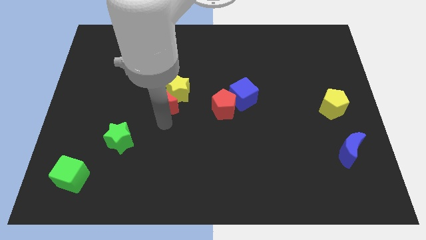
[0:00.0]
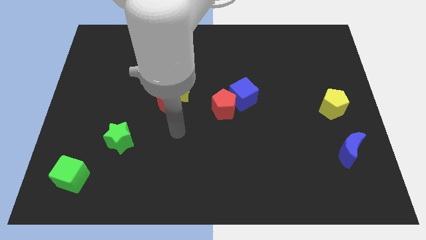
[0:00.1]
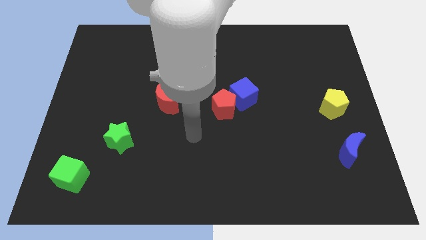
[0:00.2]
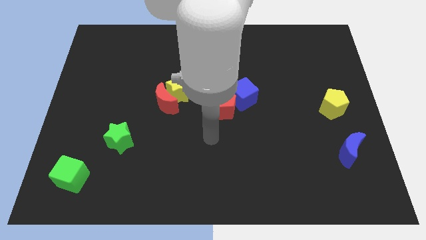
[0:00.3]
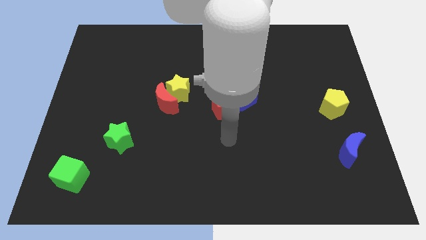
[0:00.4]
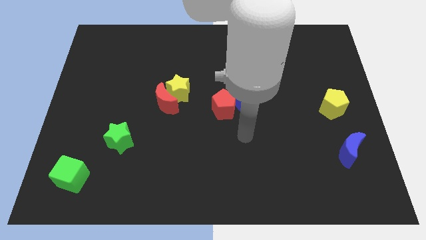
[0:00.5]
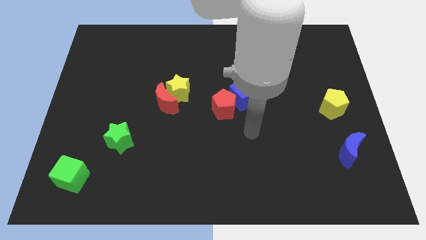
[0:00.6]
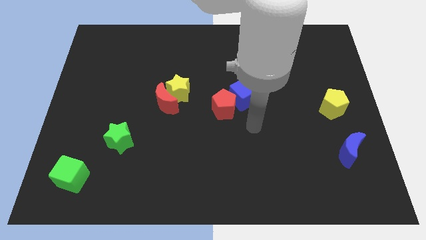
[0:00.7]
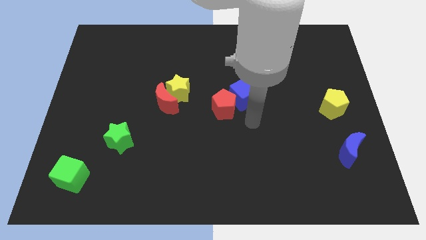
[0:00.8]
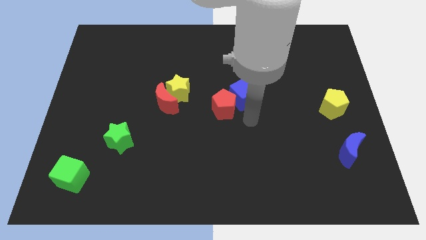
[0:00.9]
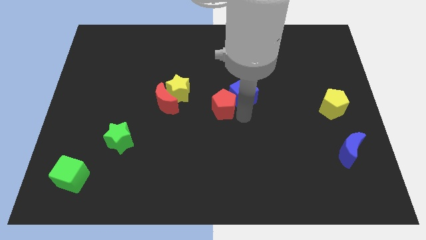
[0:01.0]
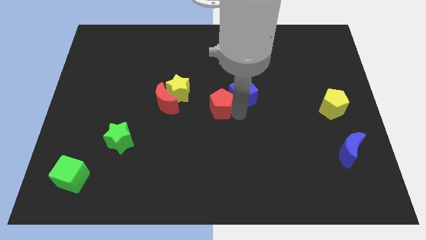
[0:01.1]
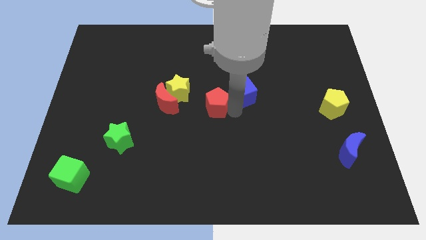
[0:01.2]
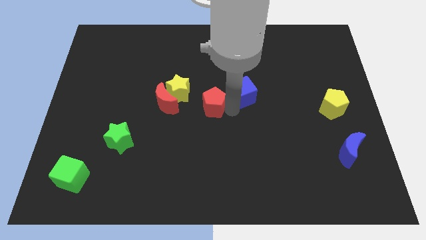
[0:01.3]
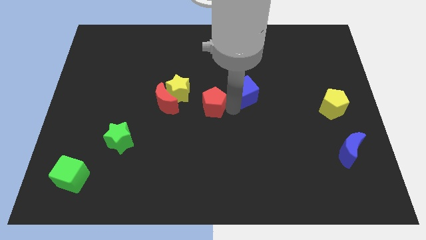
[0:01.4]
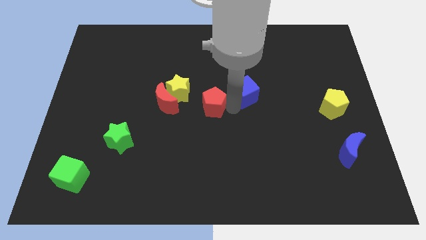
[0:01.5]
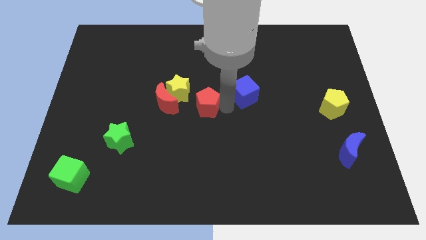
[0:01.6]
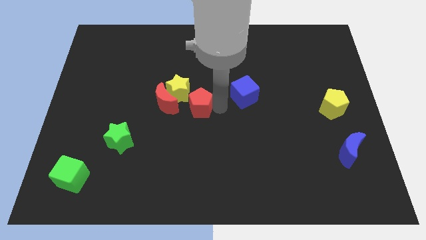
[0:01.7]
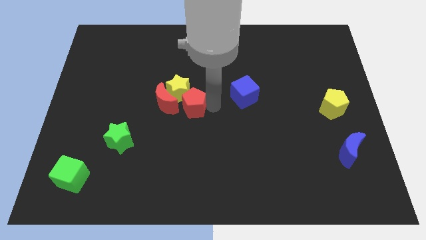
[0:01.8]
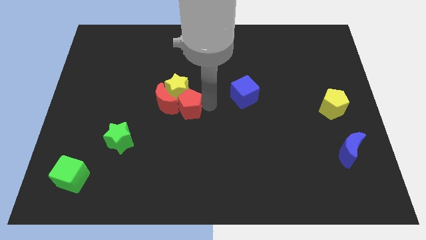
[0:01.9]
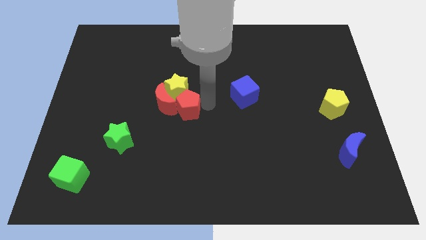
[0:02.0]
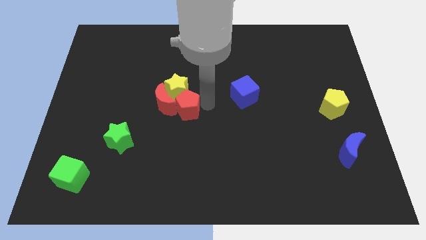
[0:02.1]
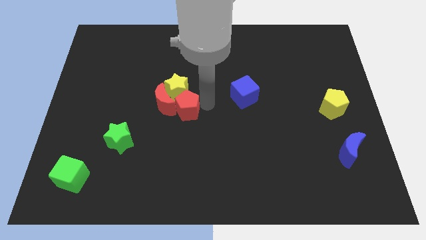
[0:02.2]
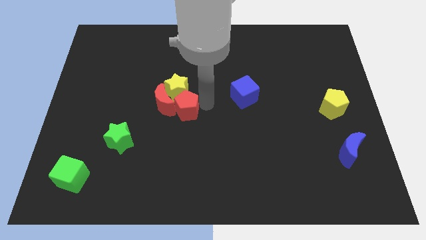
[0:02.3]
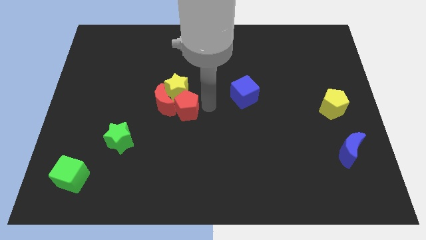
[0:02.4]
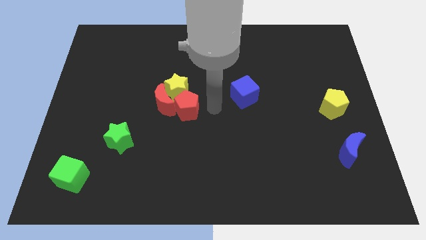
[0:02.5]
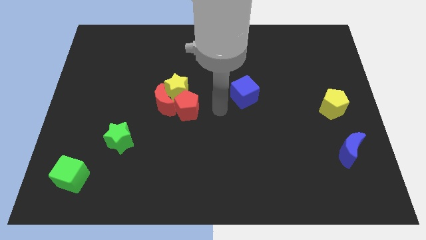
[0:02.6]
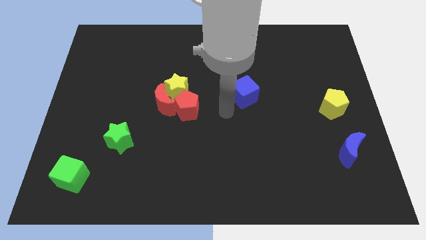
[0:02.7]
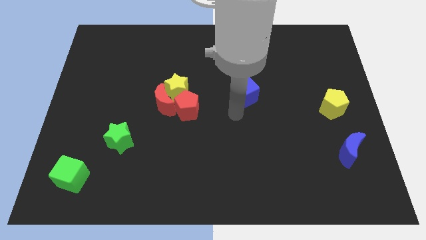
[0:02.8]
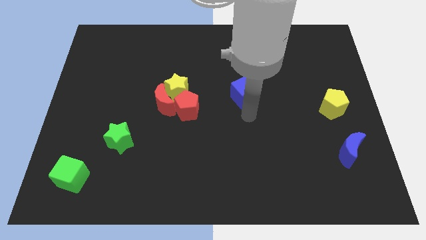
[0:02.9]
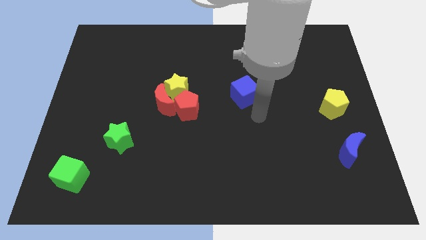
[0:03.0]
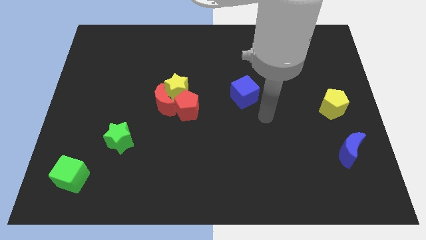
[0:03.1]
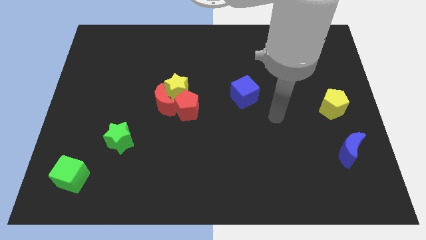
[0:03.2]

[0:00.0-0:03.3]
move the red pentagon to the bottom right of the red crescent

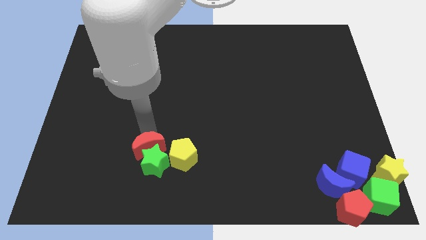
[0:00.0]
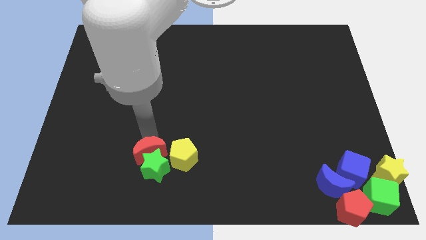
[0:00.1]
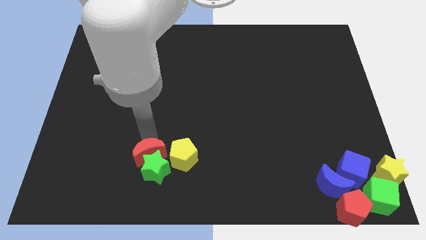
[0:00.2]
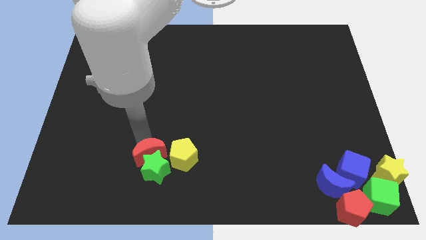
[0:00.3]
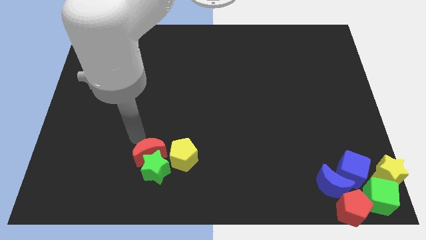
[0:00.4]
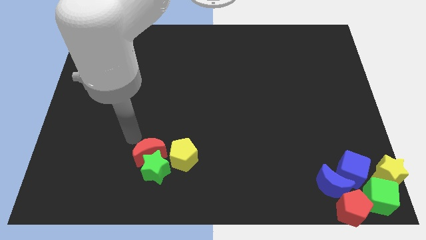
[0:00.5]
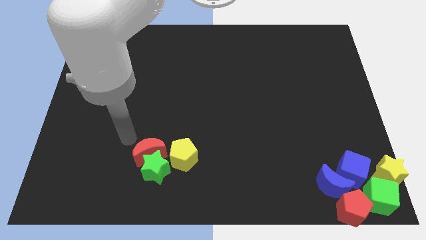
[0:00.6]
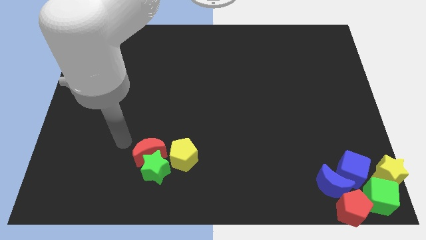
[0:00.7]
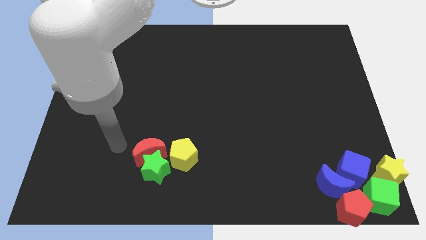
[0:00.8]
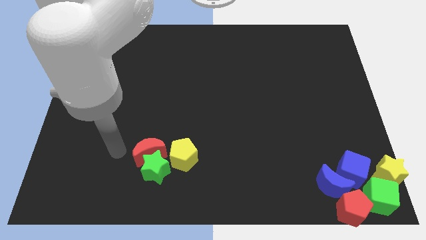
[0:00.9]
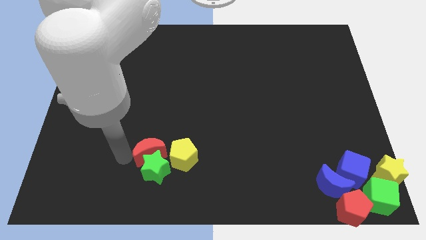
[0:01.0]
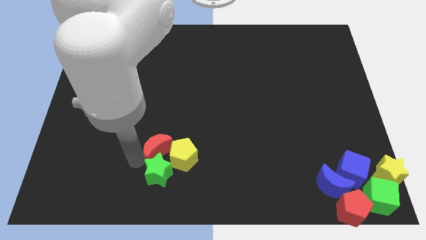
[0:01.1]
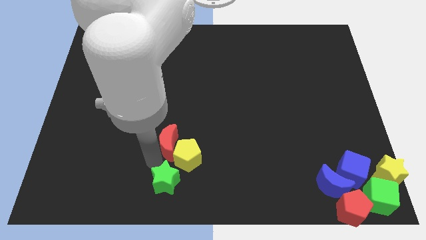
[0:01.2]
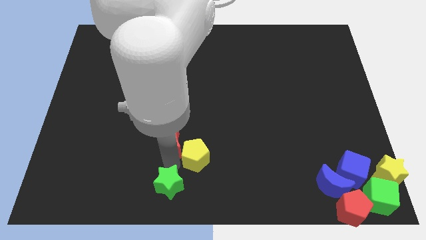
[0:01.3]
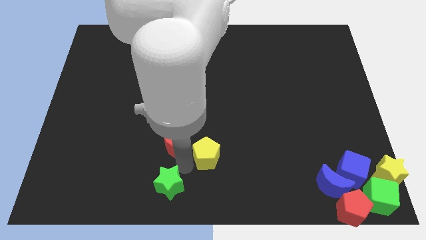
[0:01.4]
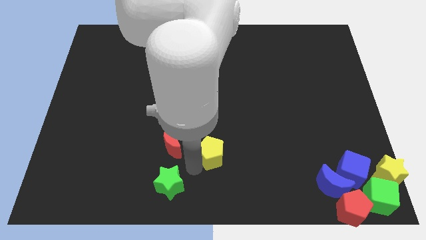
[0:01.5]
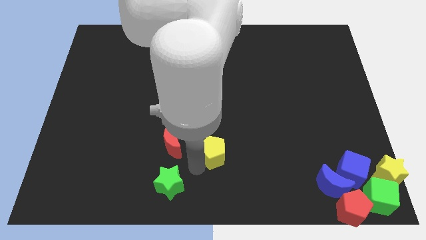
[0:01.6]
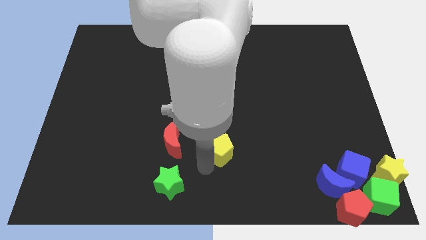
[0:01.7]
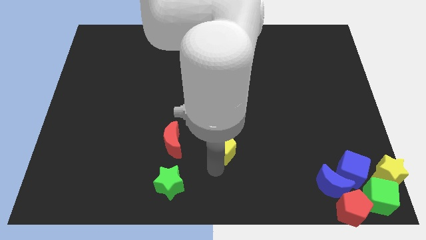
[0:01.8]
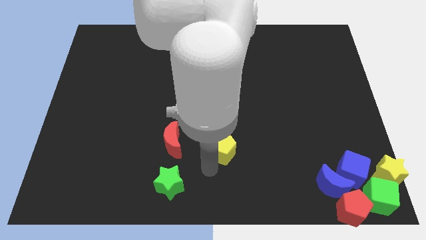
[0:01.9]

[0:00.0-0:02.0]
separate yellow pentagon from red moon and green star

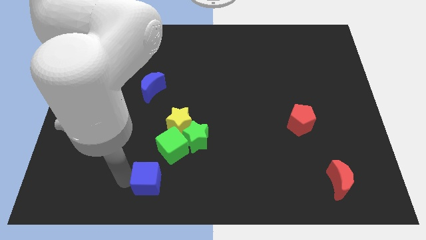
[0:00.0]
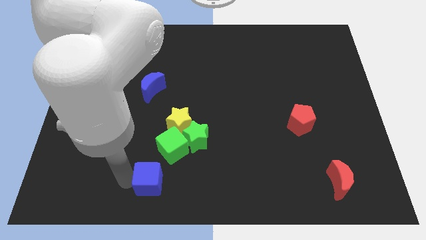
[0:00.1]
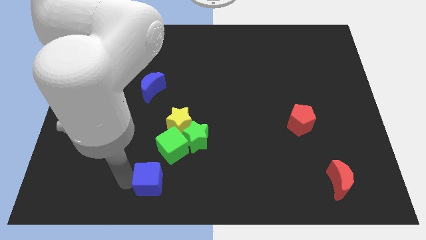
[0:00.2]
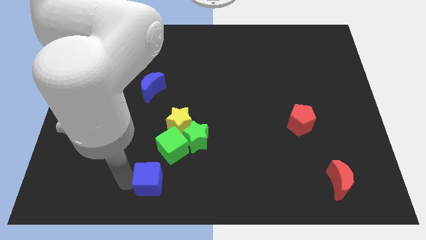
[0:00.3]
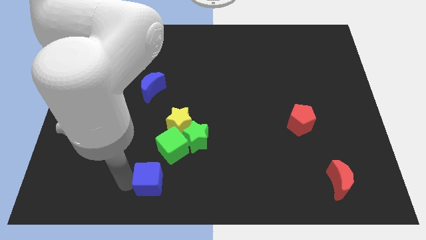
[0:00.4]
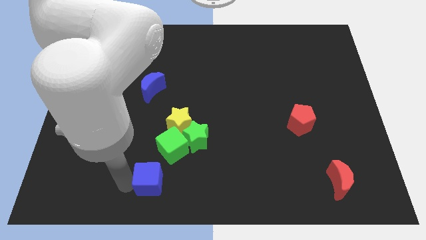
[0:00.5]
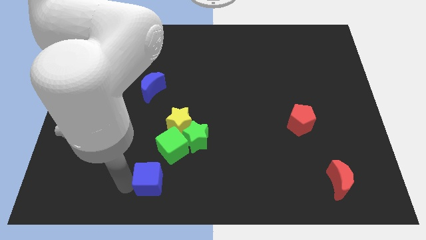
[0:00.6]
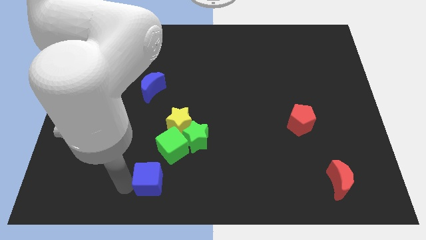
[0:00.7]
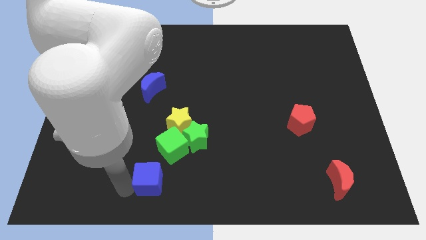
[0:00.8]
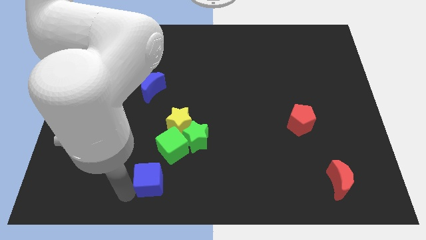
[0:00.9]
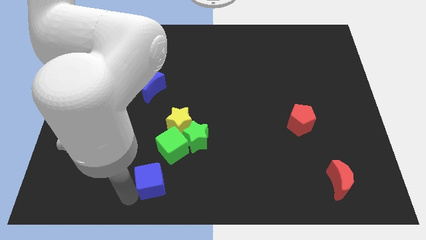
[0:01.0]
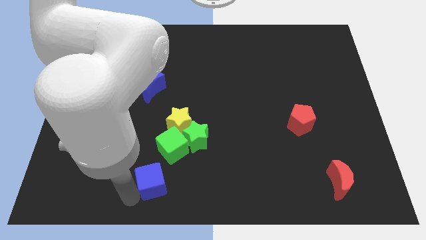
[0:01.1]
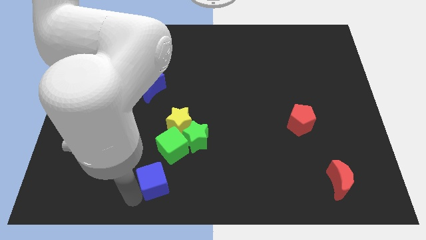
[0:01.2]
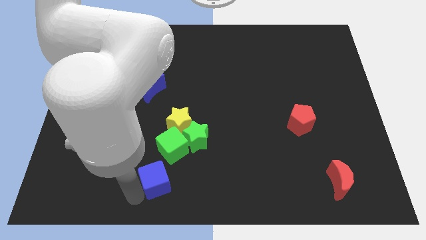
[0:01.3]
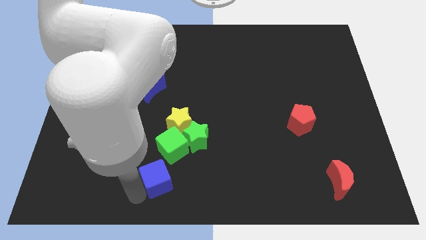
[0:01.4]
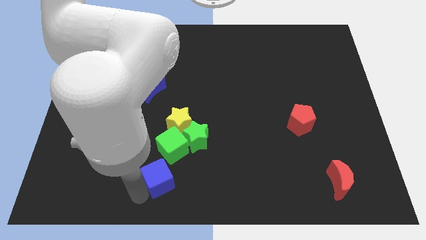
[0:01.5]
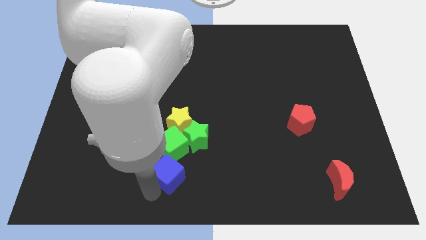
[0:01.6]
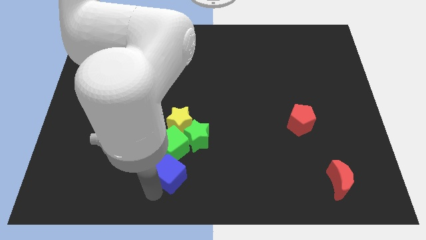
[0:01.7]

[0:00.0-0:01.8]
move the blue cube bottom to the green cube

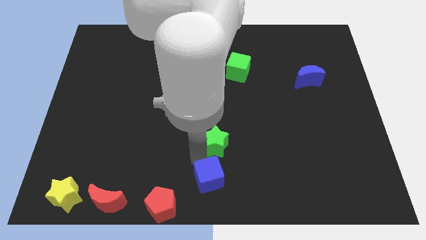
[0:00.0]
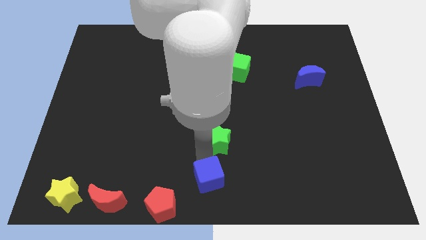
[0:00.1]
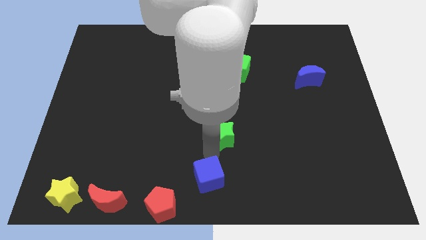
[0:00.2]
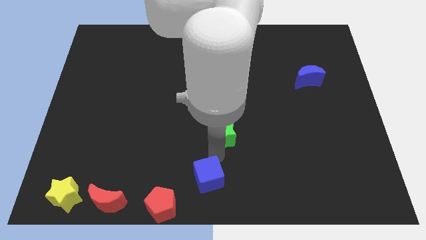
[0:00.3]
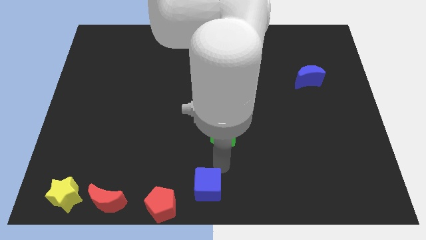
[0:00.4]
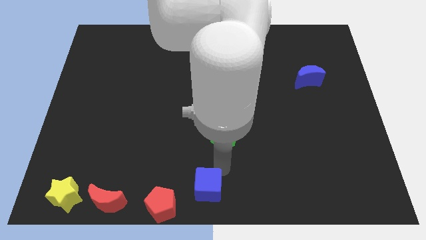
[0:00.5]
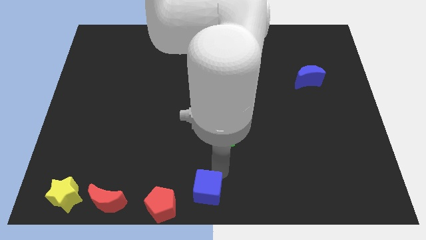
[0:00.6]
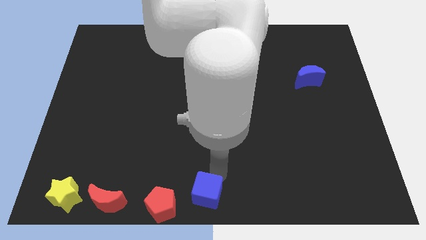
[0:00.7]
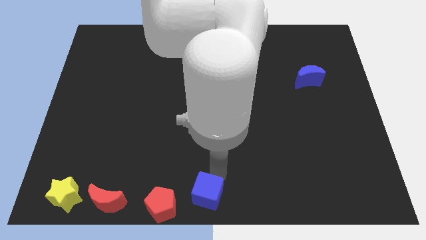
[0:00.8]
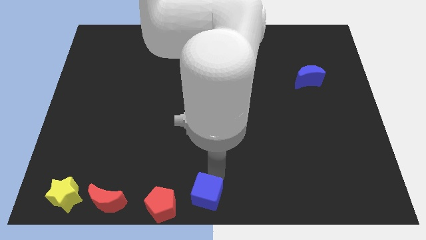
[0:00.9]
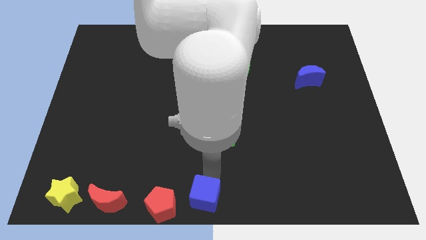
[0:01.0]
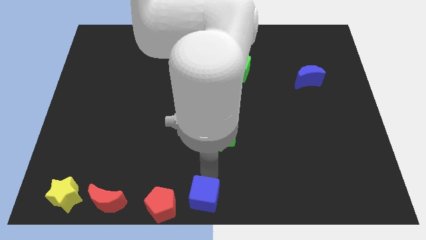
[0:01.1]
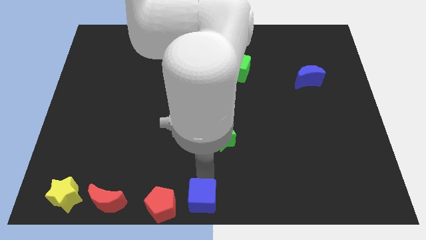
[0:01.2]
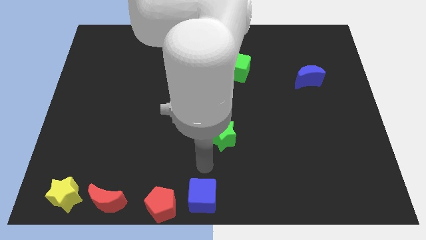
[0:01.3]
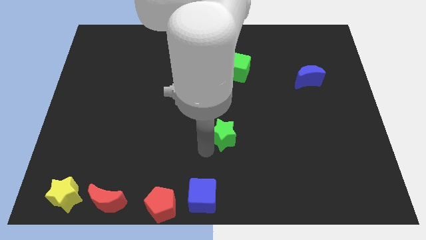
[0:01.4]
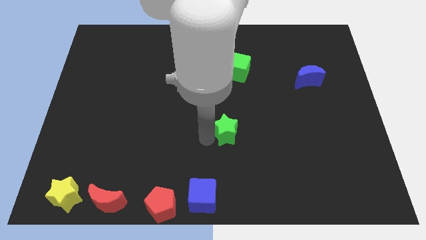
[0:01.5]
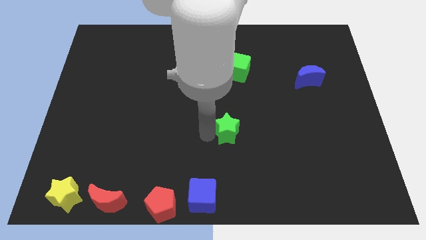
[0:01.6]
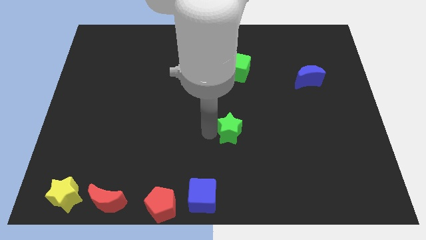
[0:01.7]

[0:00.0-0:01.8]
move the blue cube to the right of the red pentagon
